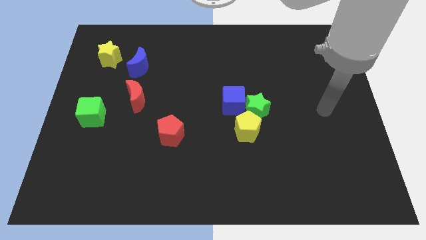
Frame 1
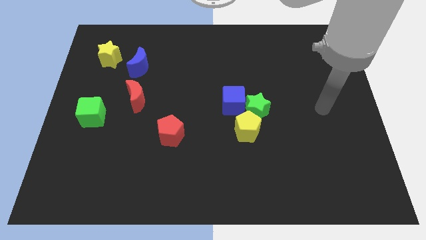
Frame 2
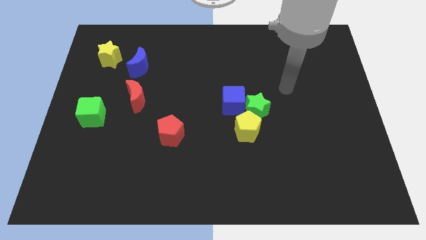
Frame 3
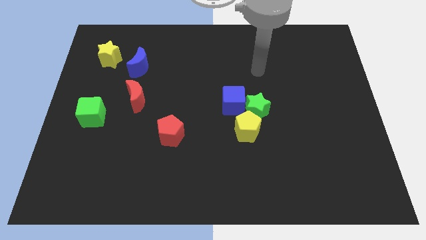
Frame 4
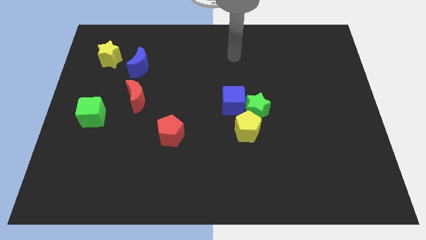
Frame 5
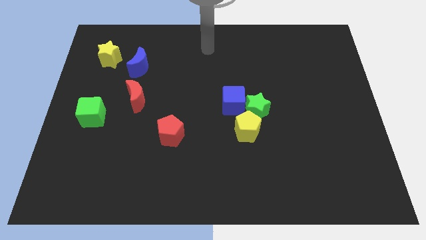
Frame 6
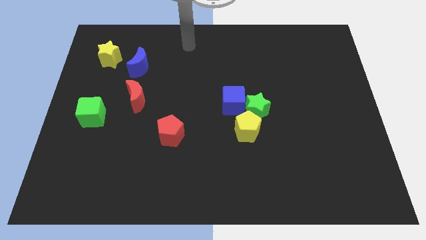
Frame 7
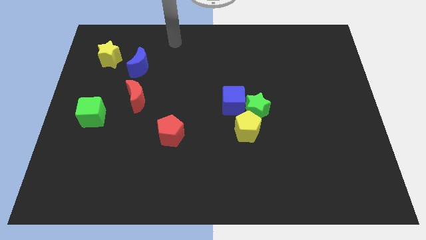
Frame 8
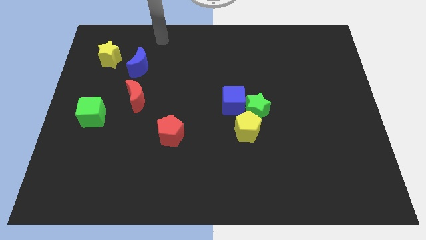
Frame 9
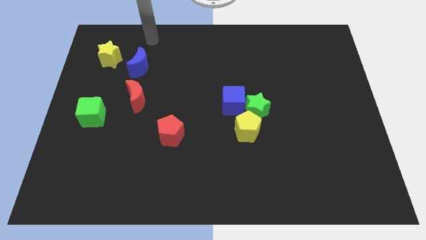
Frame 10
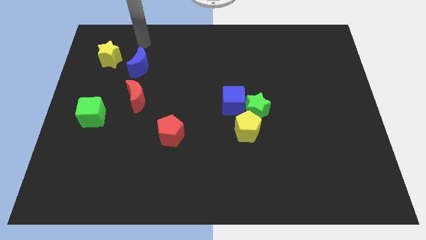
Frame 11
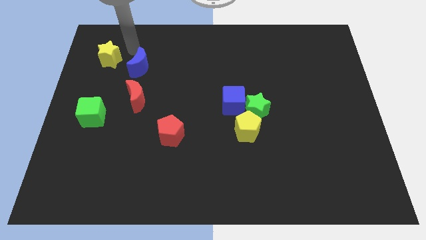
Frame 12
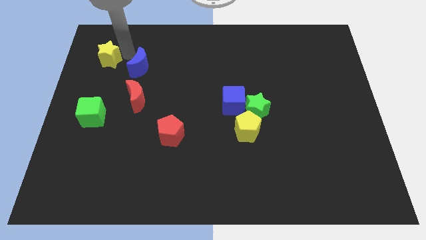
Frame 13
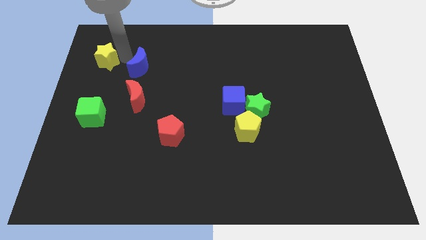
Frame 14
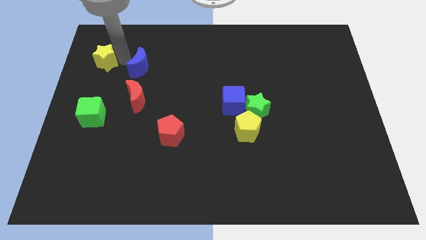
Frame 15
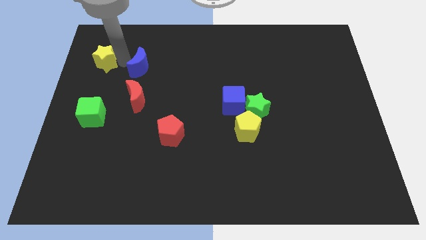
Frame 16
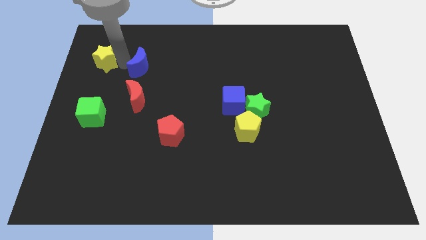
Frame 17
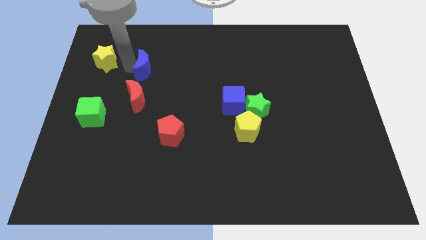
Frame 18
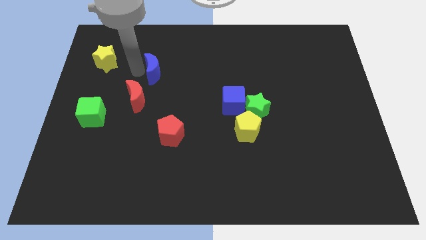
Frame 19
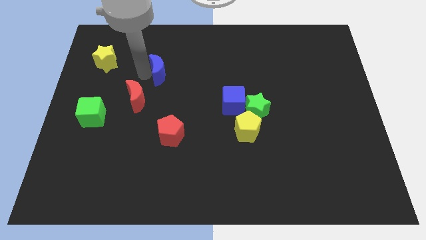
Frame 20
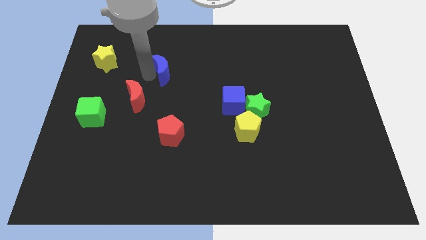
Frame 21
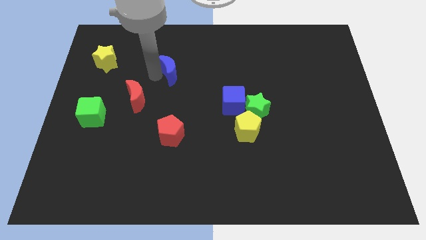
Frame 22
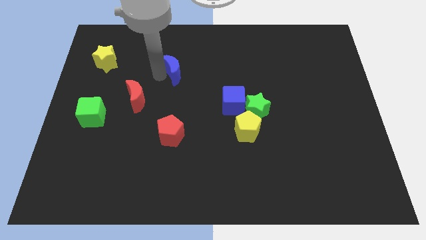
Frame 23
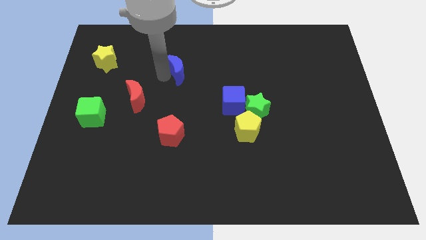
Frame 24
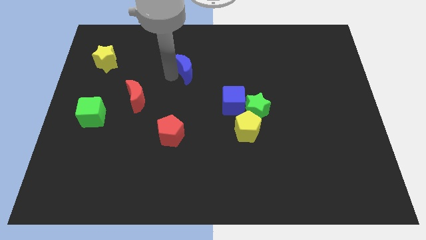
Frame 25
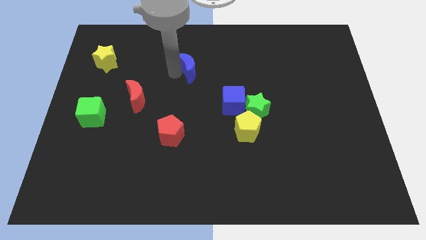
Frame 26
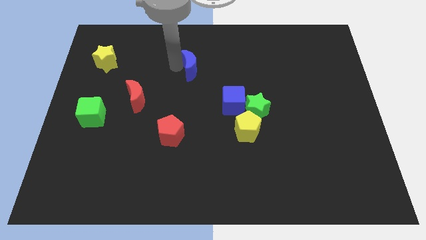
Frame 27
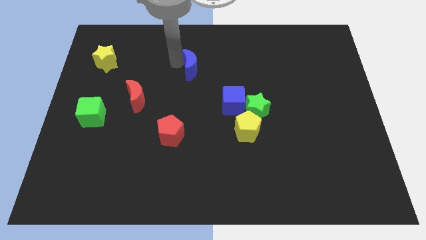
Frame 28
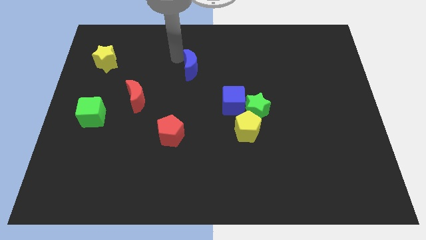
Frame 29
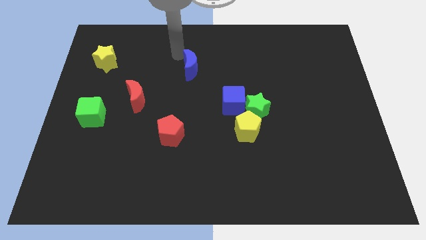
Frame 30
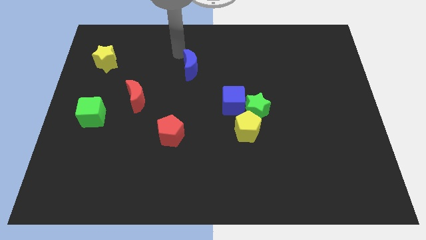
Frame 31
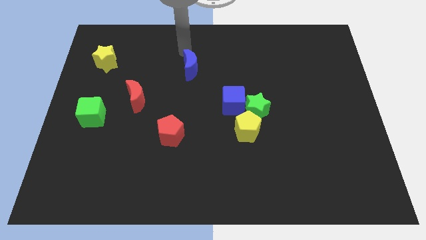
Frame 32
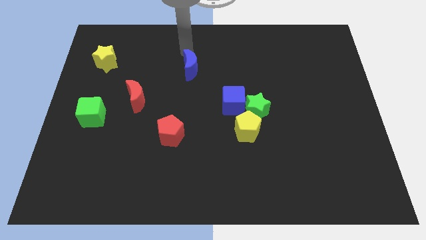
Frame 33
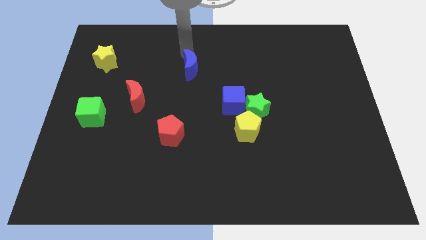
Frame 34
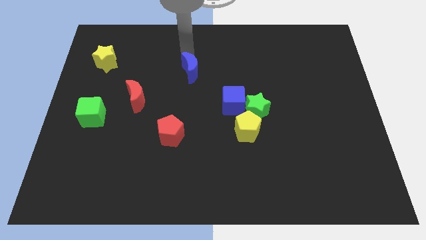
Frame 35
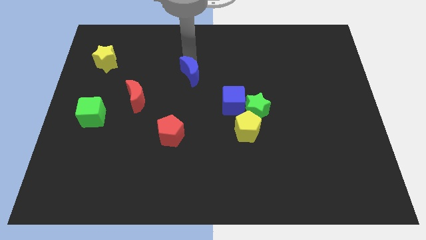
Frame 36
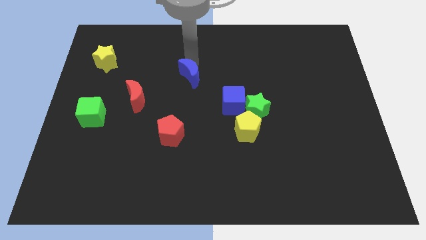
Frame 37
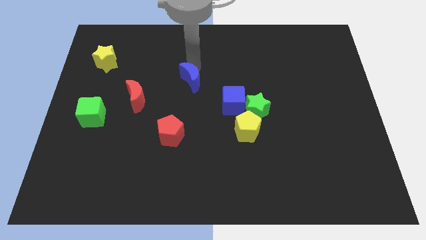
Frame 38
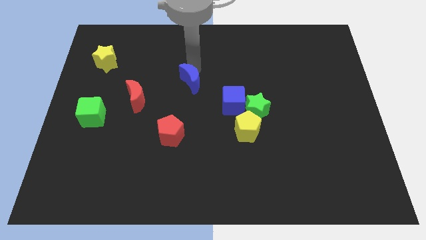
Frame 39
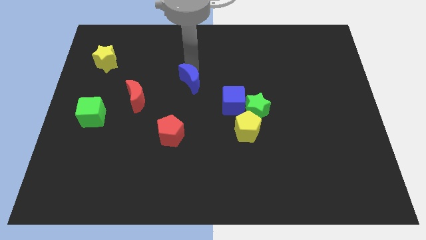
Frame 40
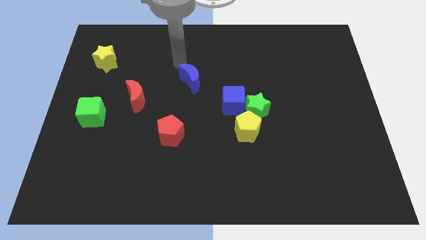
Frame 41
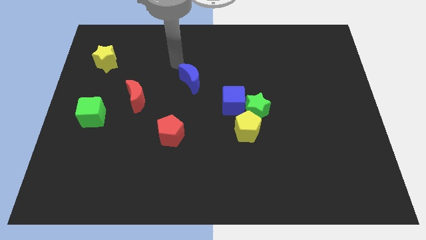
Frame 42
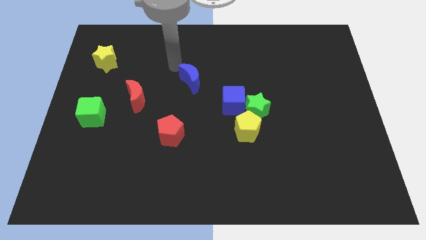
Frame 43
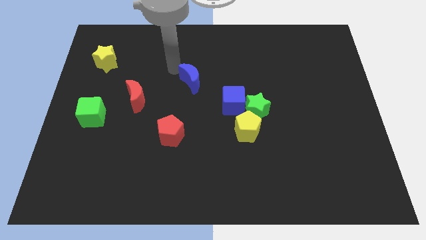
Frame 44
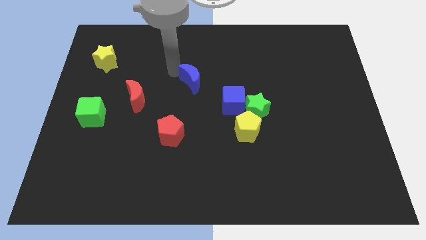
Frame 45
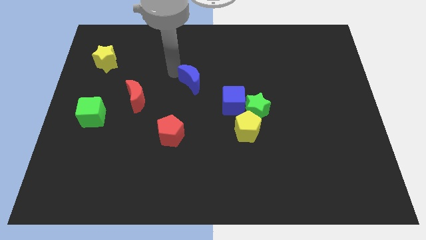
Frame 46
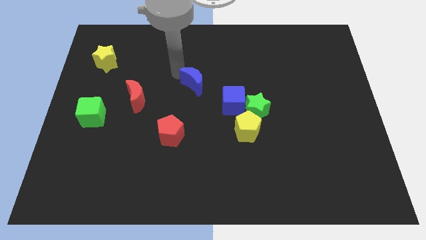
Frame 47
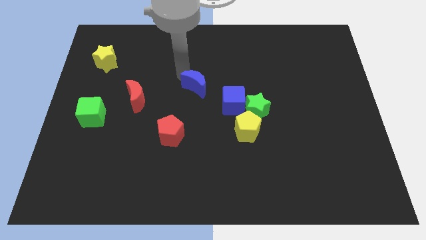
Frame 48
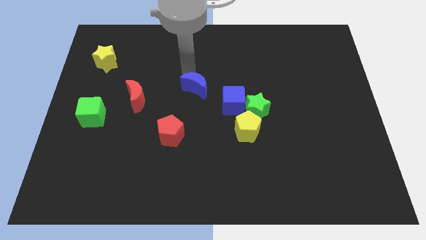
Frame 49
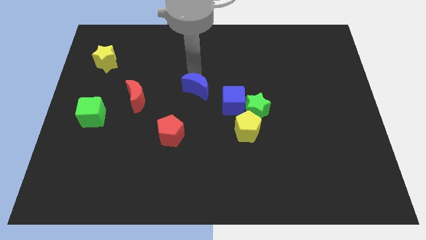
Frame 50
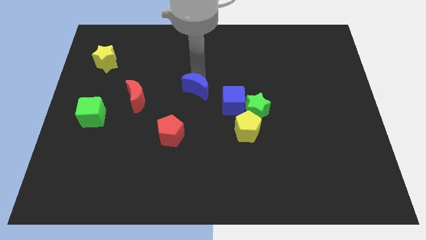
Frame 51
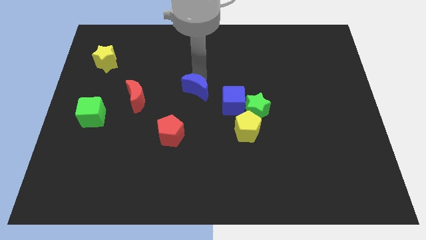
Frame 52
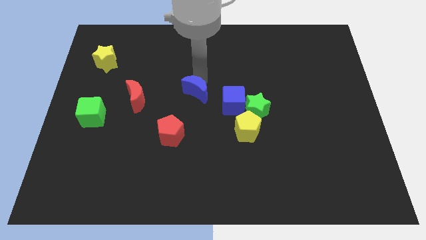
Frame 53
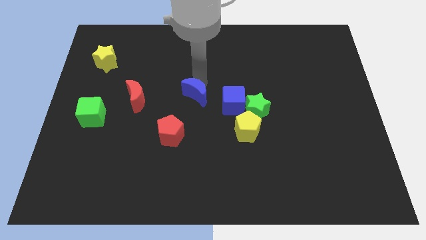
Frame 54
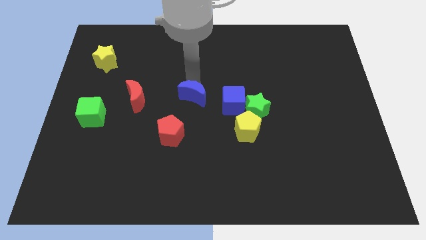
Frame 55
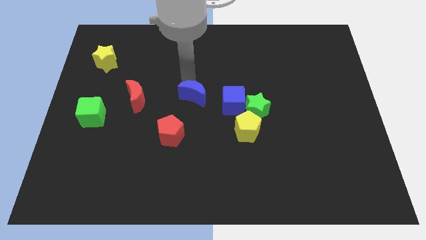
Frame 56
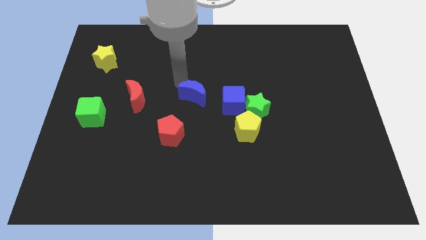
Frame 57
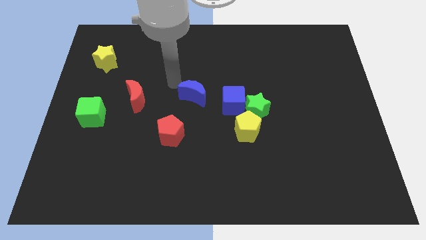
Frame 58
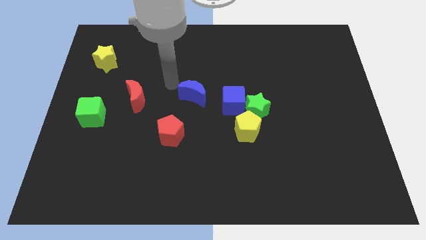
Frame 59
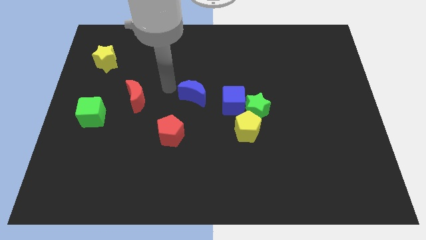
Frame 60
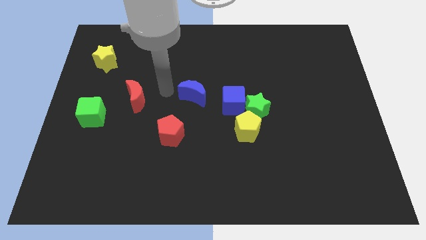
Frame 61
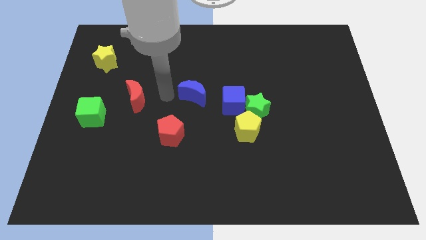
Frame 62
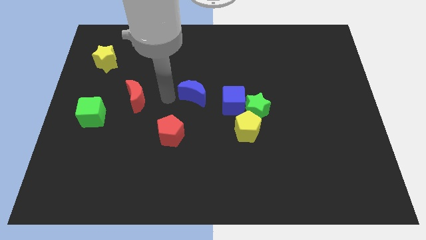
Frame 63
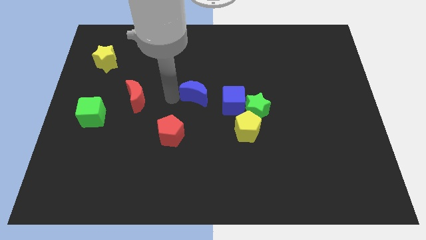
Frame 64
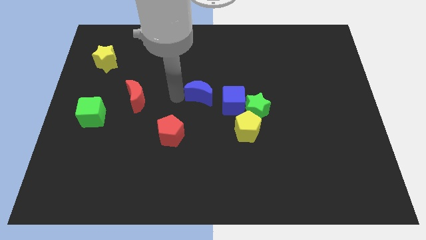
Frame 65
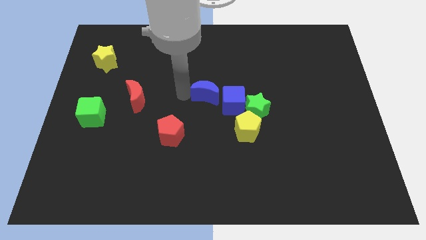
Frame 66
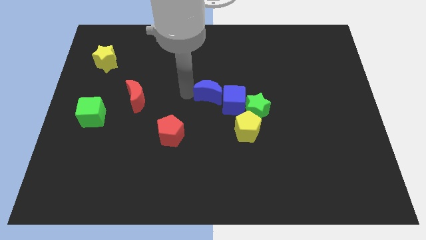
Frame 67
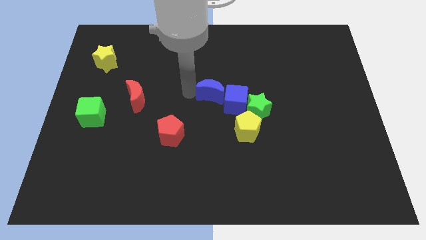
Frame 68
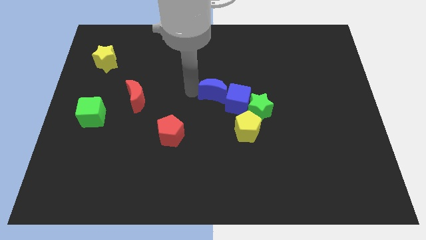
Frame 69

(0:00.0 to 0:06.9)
push the blue moon to the blue cube

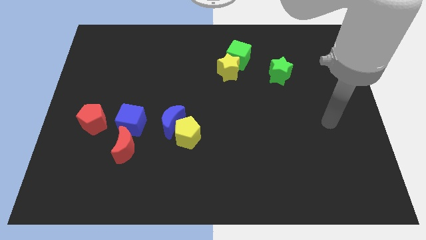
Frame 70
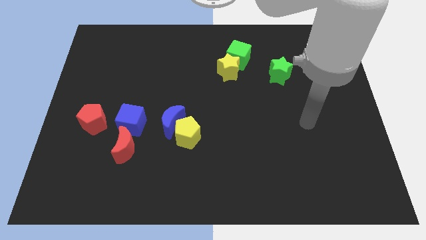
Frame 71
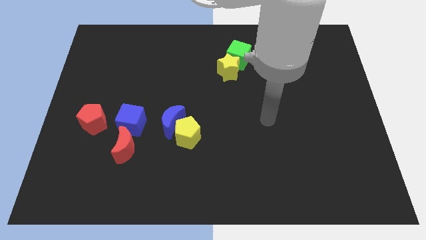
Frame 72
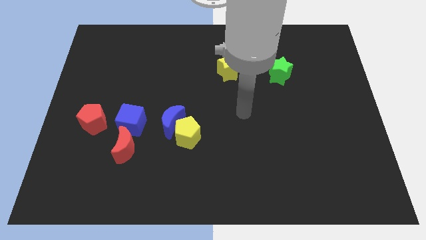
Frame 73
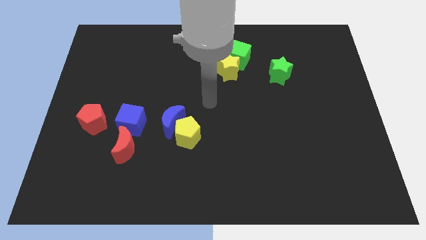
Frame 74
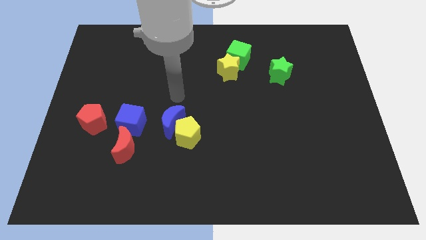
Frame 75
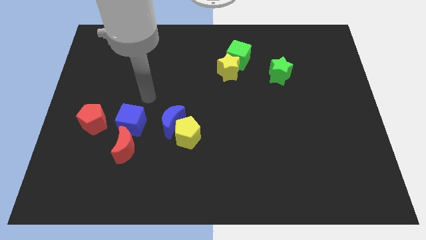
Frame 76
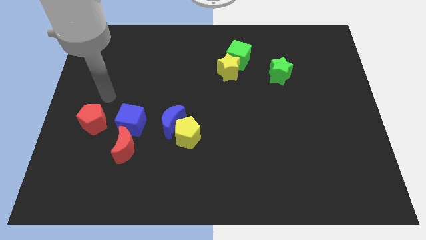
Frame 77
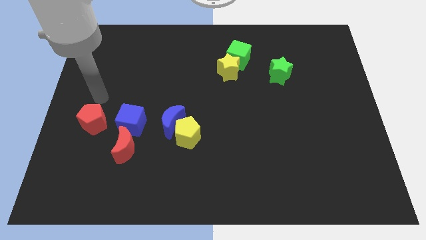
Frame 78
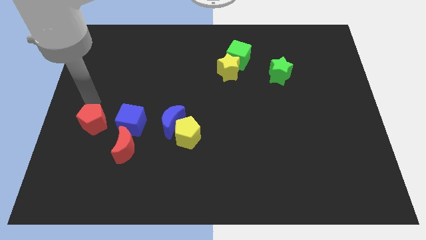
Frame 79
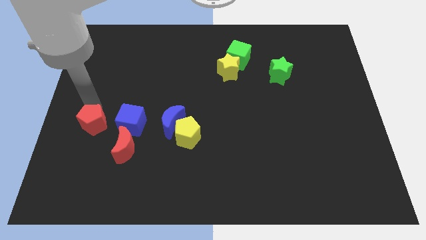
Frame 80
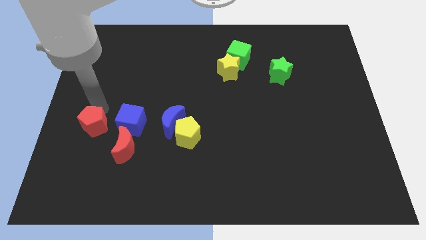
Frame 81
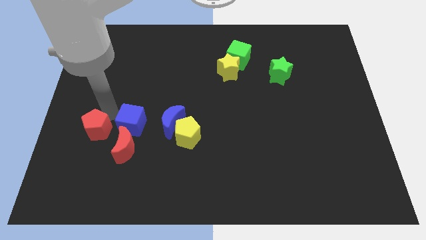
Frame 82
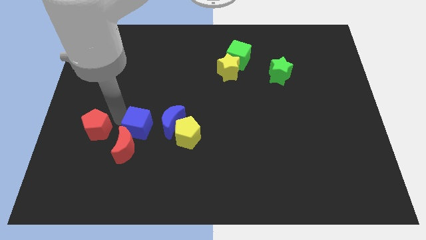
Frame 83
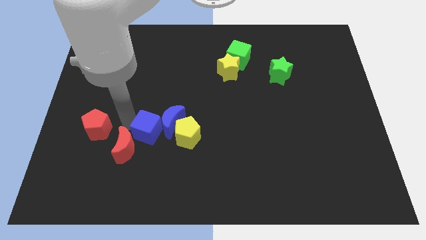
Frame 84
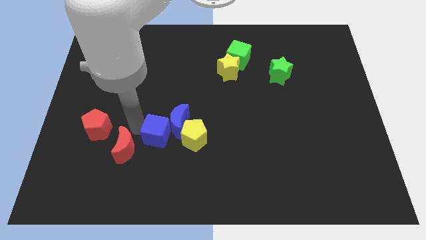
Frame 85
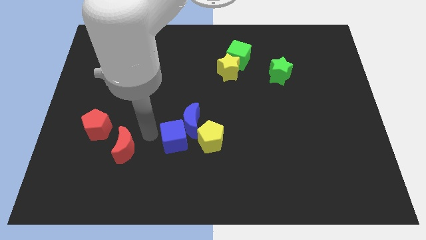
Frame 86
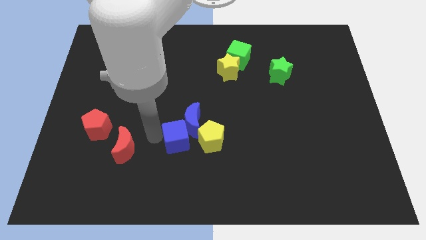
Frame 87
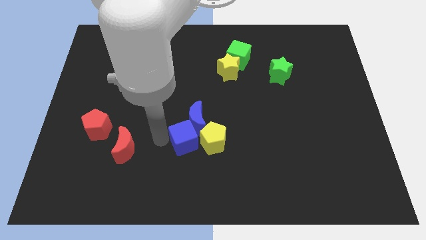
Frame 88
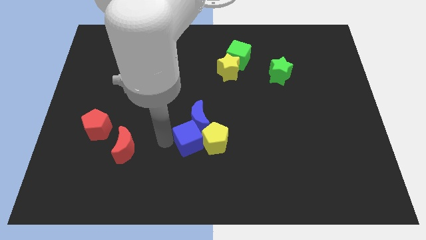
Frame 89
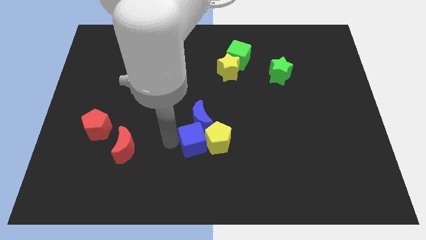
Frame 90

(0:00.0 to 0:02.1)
put the blue cube next to the yellow pentagon
